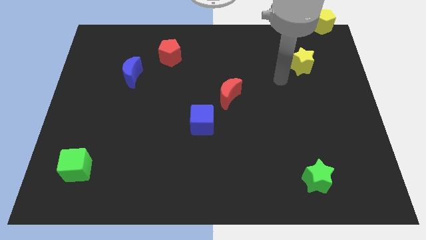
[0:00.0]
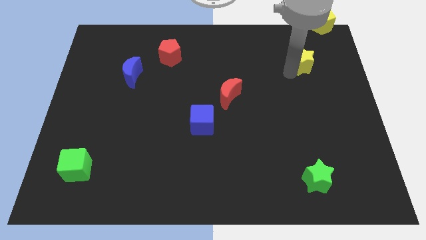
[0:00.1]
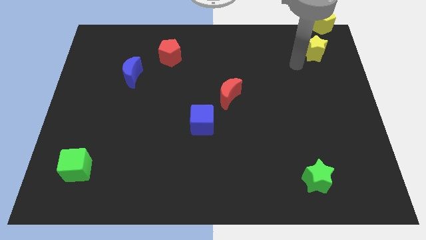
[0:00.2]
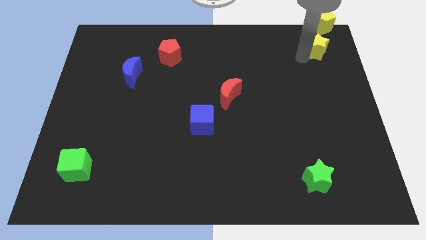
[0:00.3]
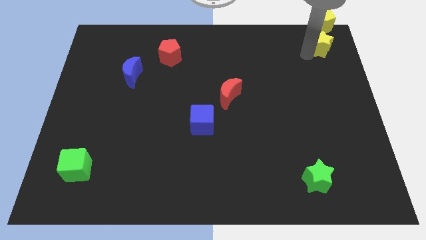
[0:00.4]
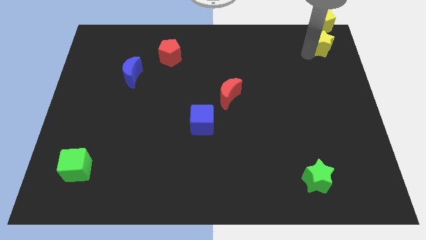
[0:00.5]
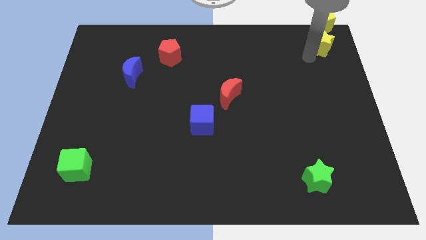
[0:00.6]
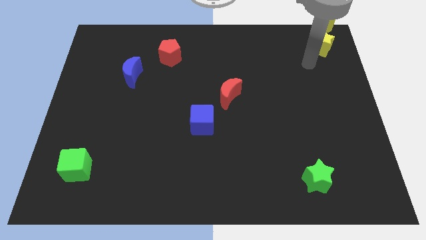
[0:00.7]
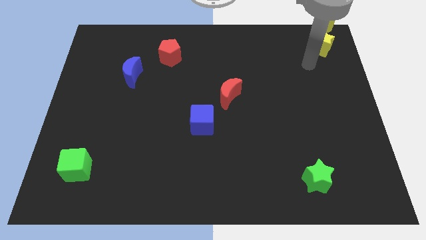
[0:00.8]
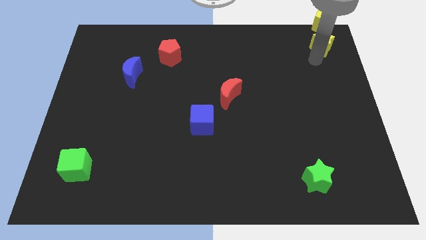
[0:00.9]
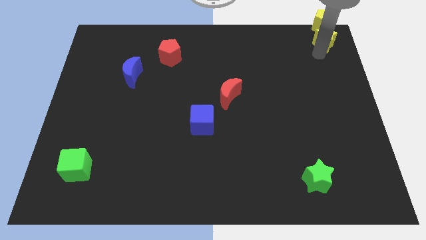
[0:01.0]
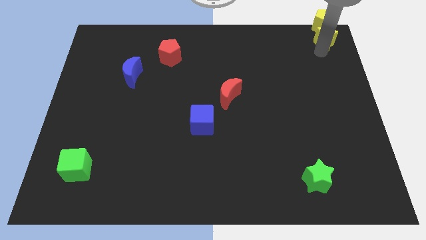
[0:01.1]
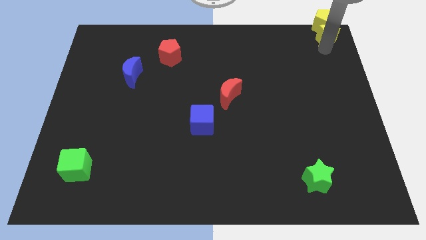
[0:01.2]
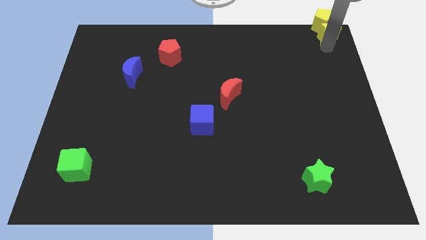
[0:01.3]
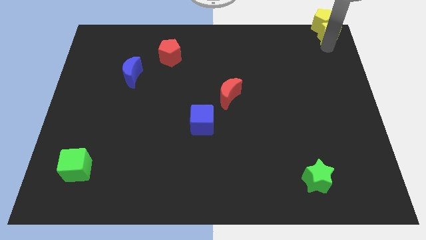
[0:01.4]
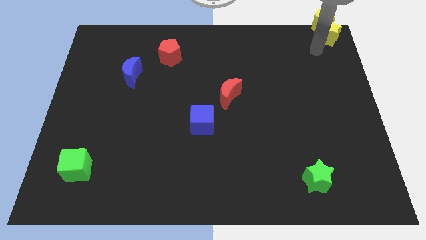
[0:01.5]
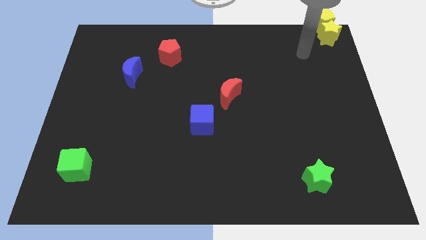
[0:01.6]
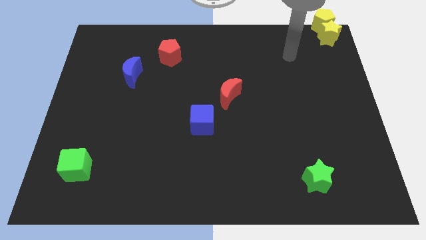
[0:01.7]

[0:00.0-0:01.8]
move the yellow star into the yellow pentagon

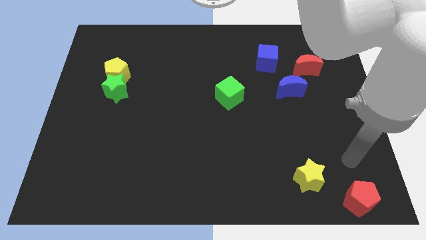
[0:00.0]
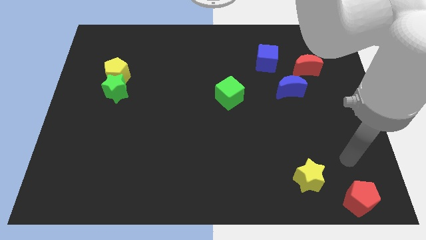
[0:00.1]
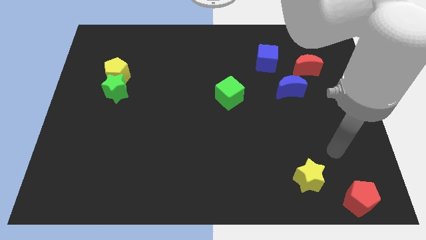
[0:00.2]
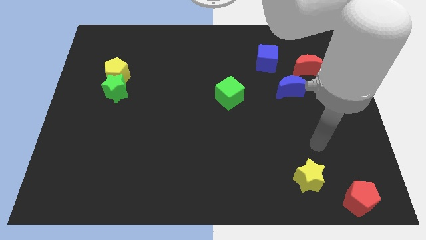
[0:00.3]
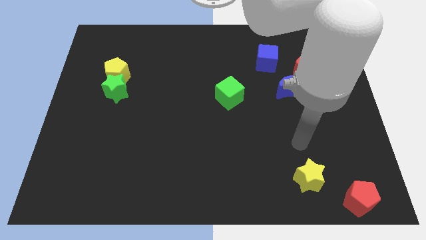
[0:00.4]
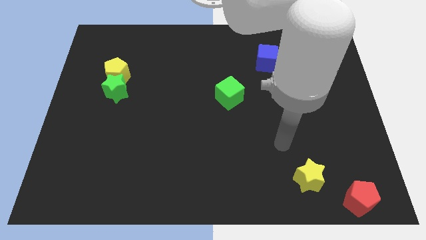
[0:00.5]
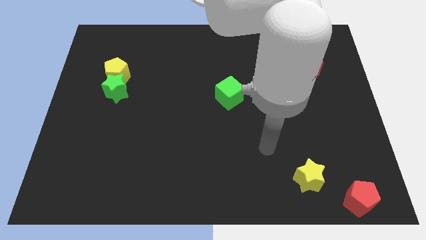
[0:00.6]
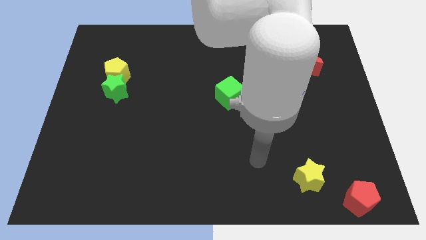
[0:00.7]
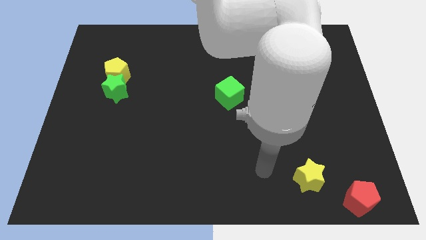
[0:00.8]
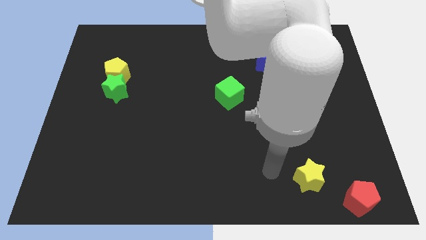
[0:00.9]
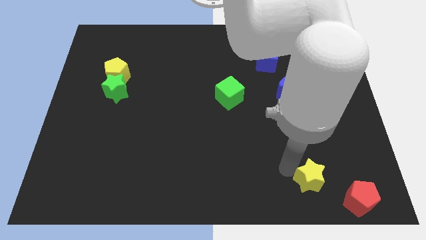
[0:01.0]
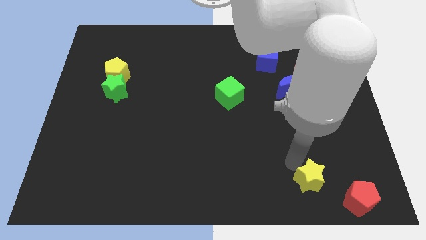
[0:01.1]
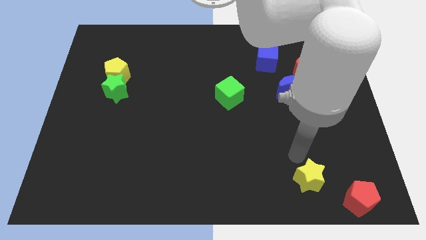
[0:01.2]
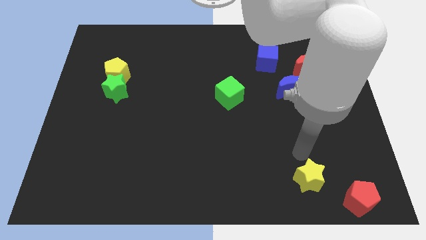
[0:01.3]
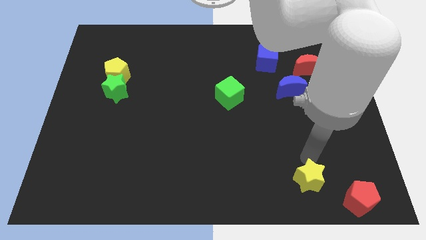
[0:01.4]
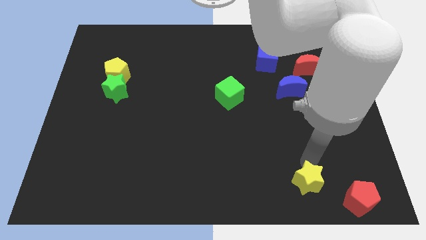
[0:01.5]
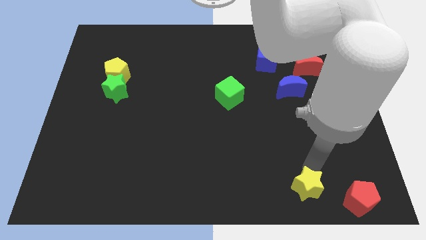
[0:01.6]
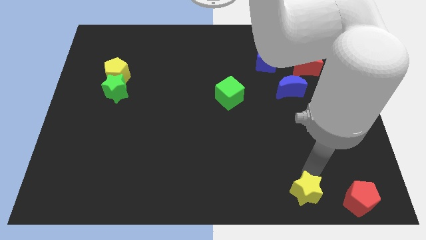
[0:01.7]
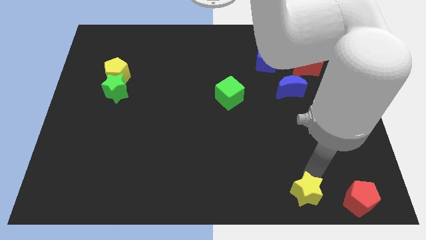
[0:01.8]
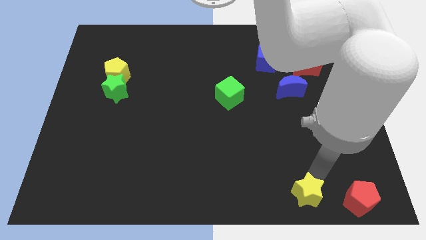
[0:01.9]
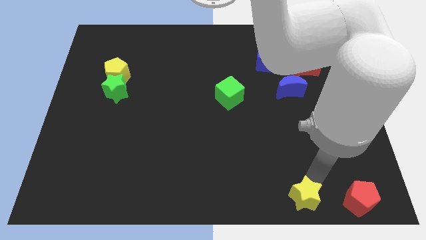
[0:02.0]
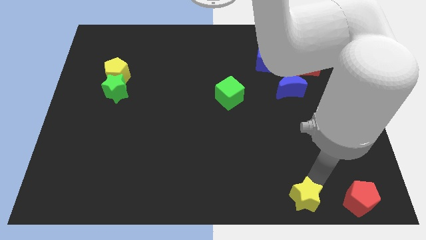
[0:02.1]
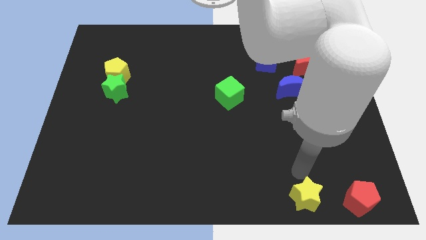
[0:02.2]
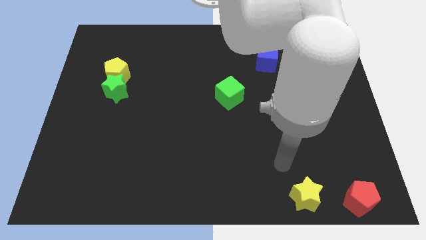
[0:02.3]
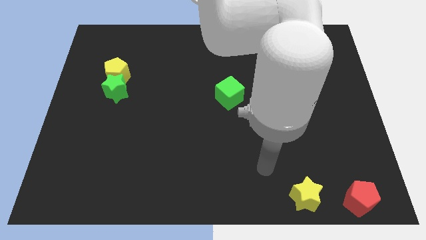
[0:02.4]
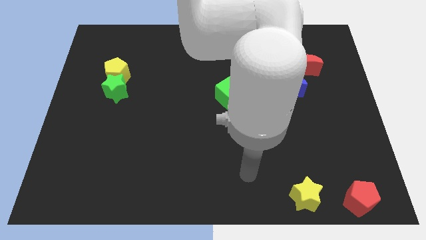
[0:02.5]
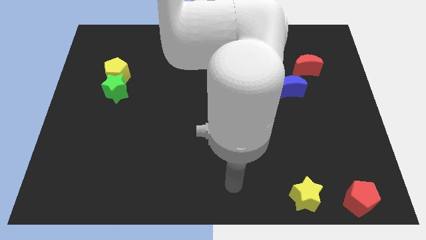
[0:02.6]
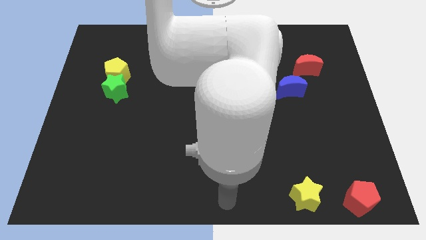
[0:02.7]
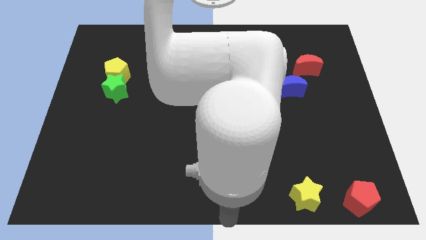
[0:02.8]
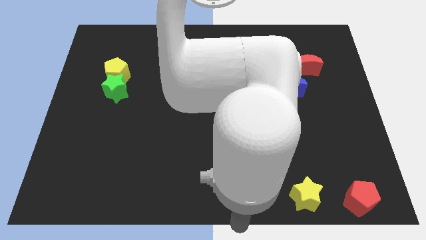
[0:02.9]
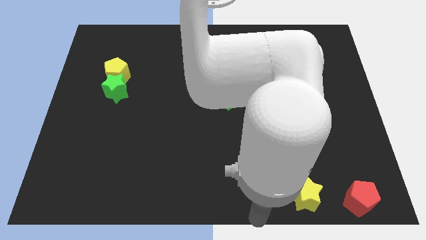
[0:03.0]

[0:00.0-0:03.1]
place the yellow star to the left side of red pentagon

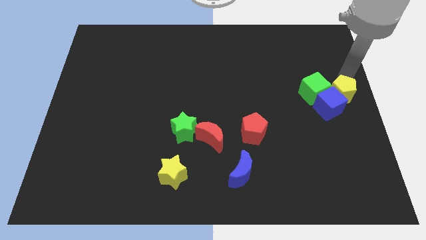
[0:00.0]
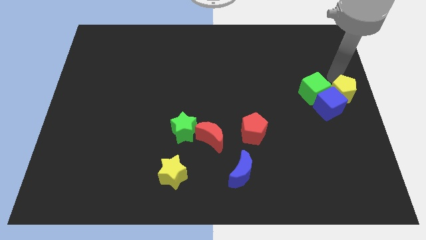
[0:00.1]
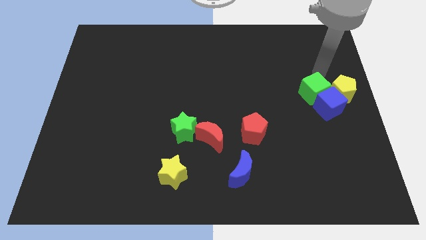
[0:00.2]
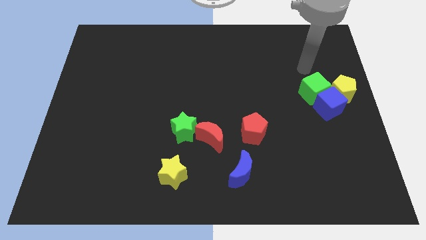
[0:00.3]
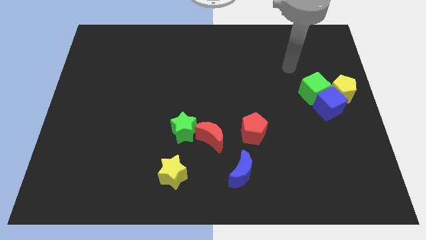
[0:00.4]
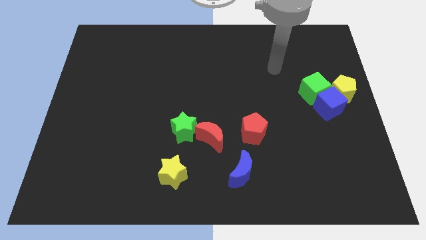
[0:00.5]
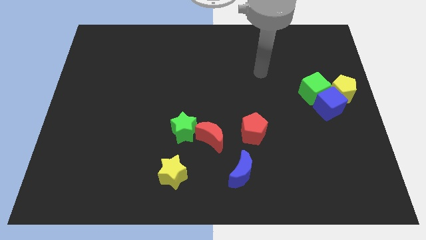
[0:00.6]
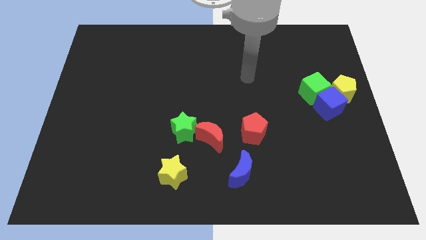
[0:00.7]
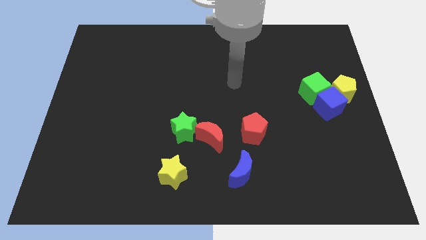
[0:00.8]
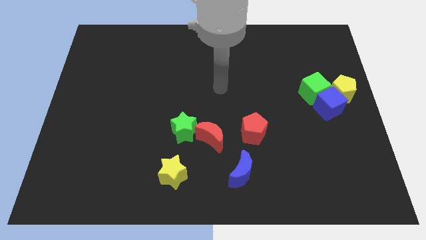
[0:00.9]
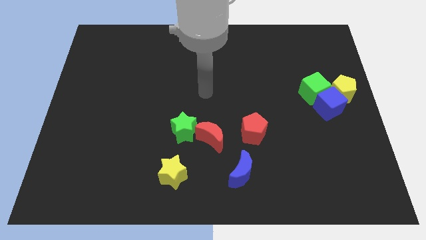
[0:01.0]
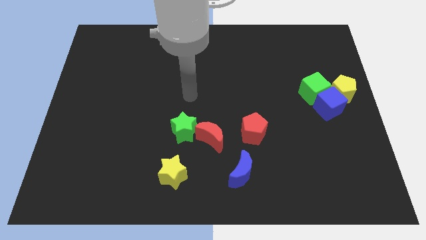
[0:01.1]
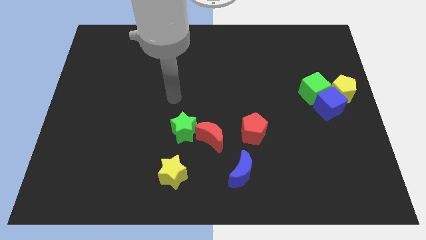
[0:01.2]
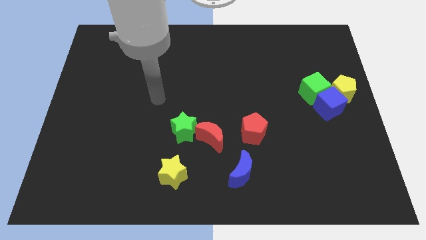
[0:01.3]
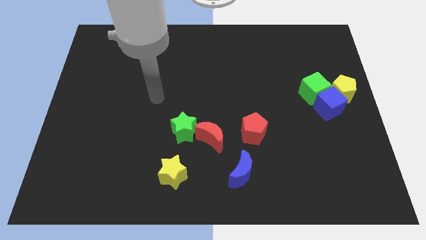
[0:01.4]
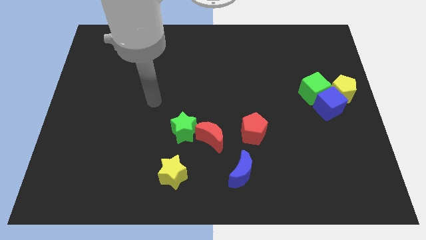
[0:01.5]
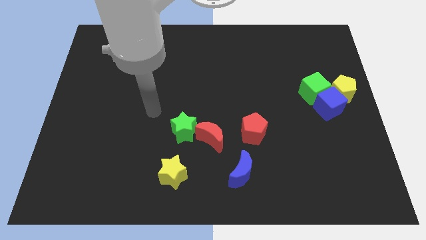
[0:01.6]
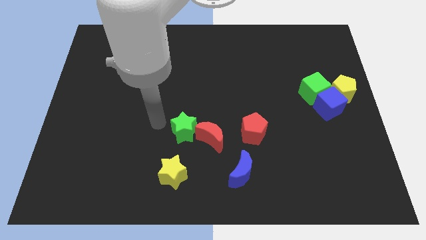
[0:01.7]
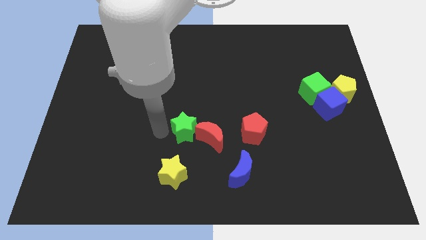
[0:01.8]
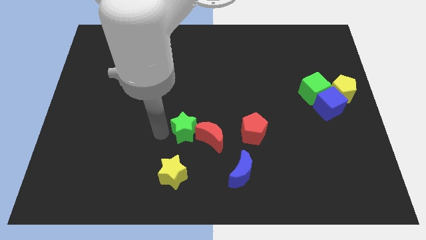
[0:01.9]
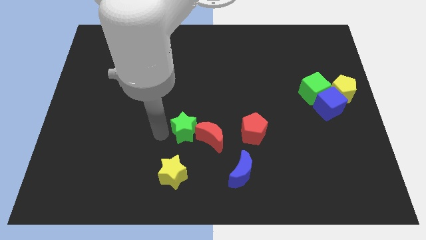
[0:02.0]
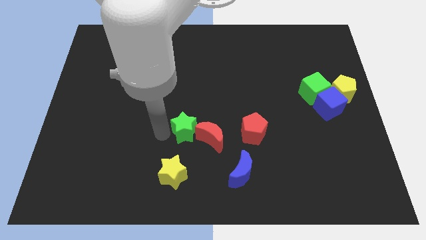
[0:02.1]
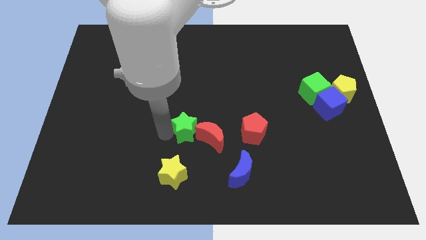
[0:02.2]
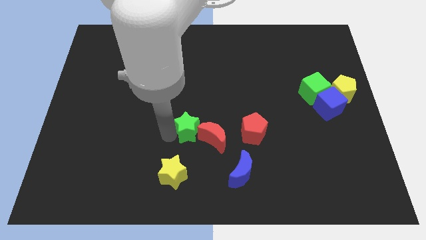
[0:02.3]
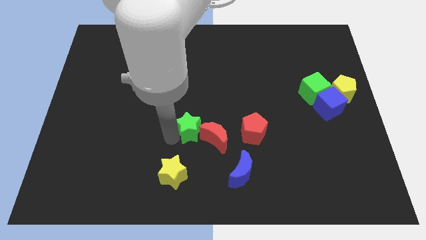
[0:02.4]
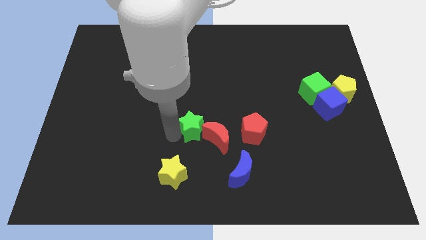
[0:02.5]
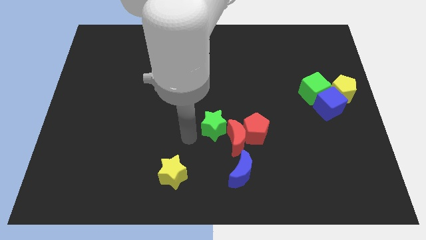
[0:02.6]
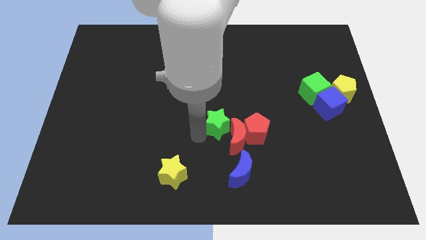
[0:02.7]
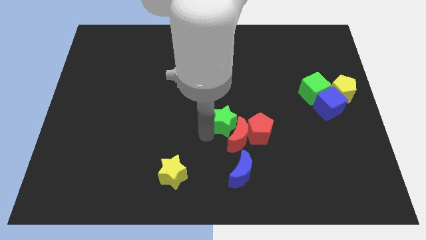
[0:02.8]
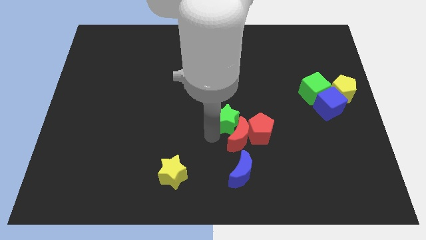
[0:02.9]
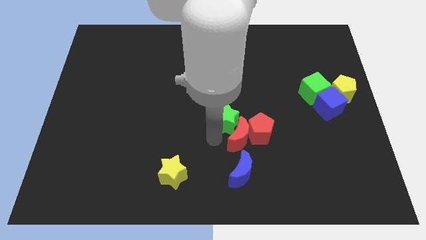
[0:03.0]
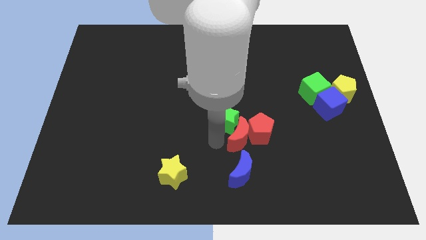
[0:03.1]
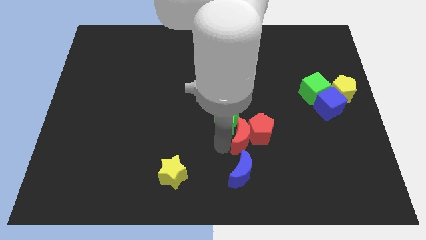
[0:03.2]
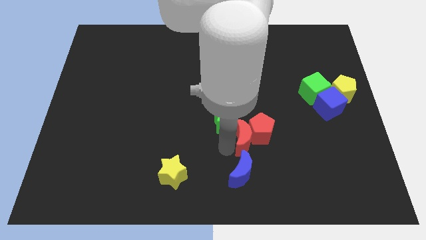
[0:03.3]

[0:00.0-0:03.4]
push green star towards center

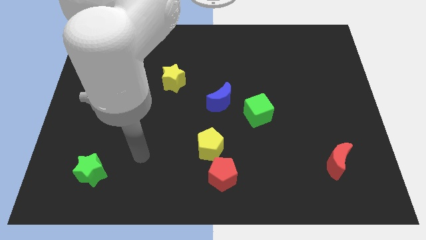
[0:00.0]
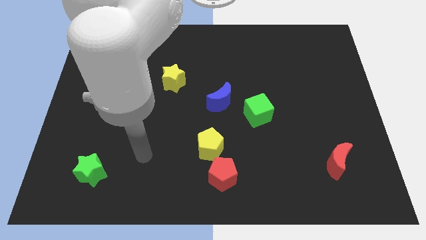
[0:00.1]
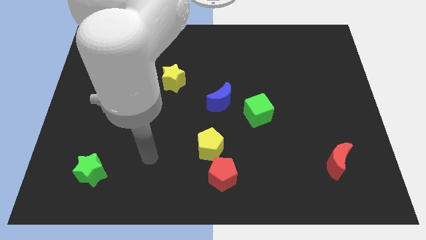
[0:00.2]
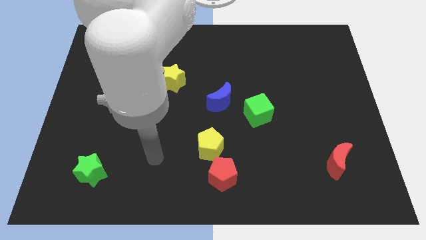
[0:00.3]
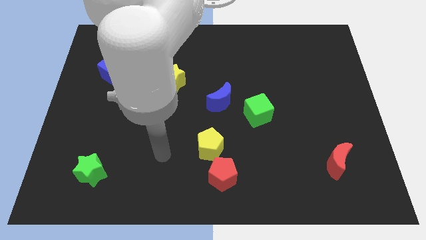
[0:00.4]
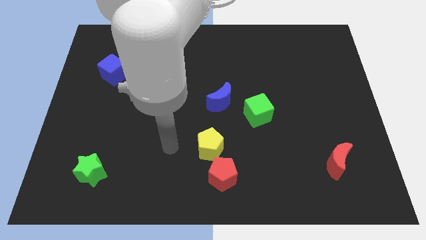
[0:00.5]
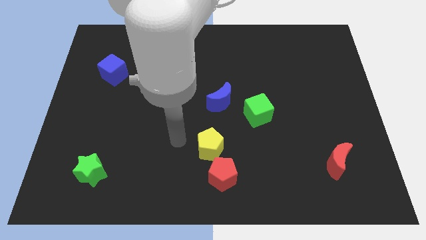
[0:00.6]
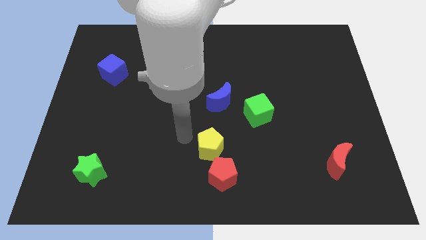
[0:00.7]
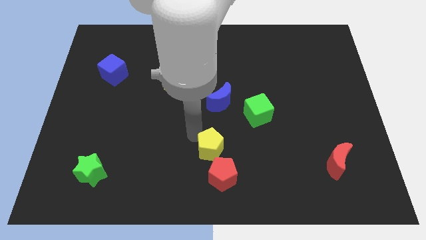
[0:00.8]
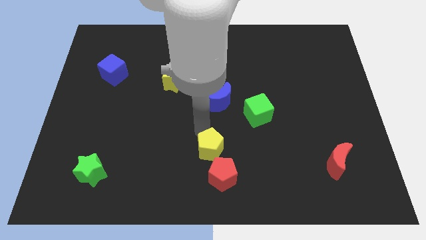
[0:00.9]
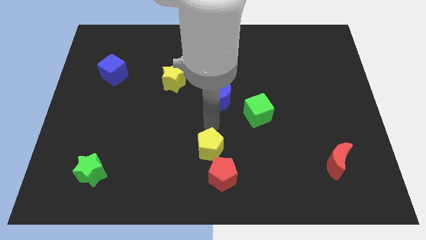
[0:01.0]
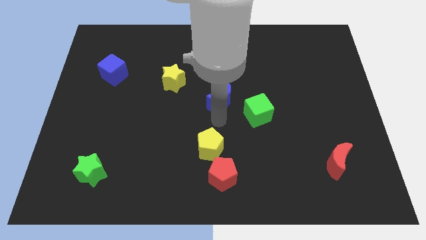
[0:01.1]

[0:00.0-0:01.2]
place your arm at the top of the yellow pentagon
